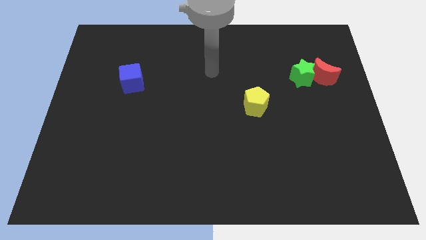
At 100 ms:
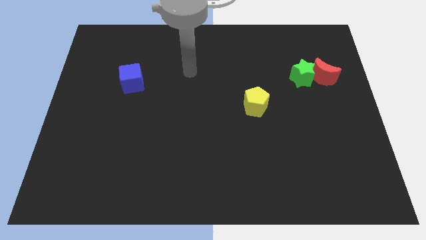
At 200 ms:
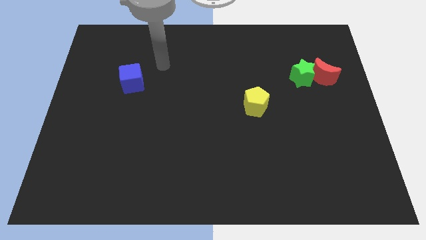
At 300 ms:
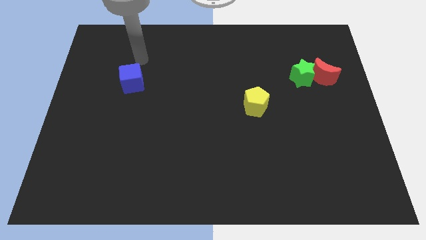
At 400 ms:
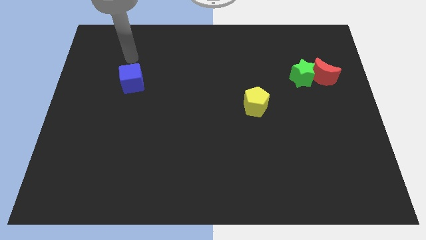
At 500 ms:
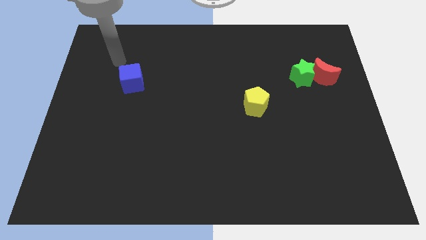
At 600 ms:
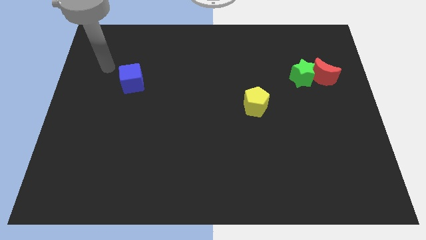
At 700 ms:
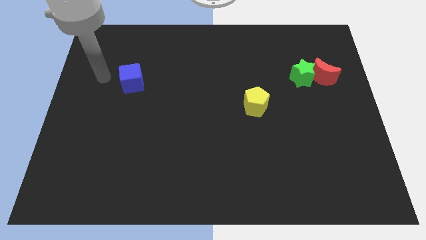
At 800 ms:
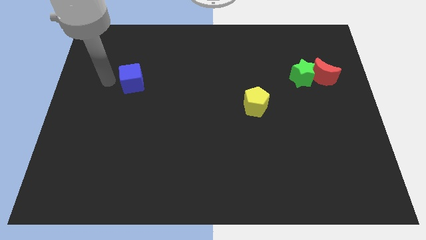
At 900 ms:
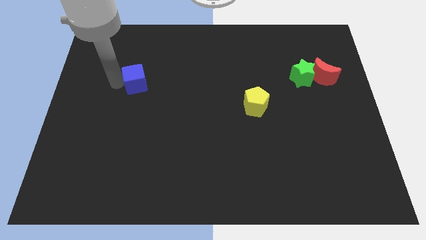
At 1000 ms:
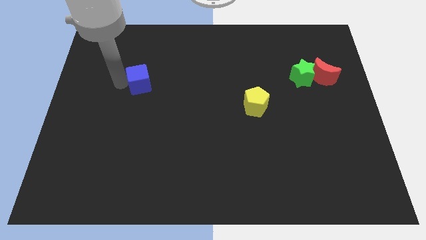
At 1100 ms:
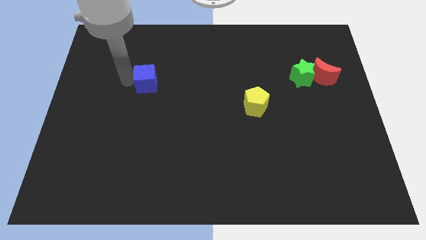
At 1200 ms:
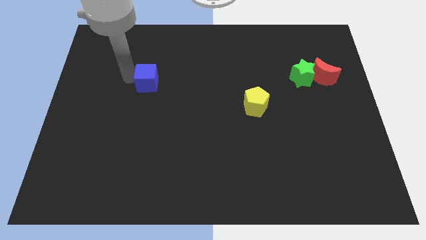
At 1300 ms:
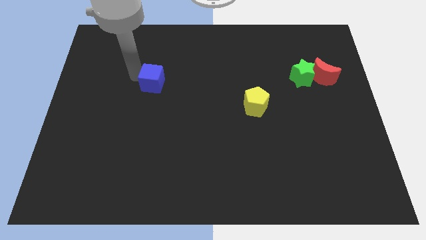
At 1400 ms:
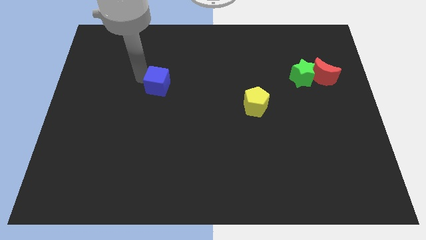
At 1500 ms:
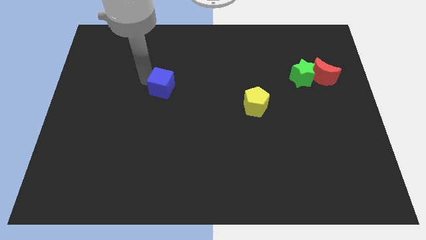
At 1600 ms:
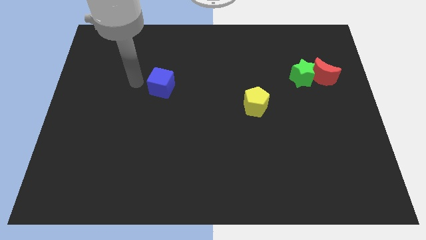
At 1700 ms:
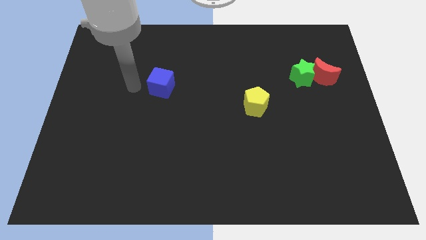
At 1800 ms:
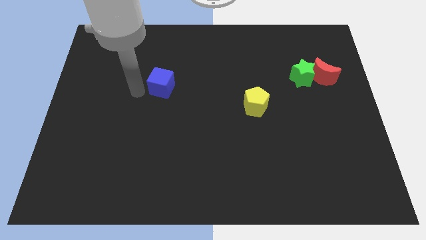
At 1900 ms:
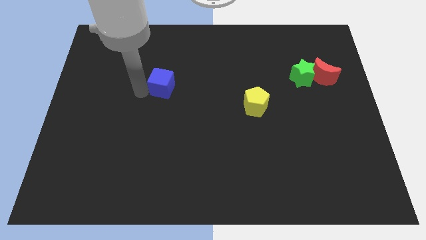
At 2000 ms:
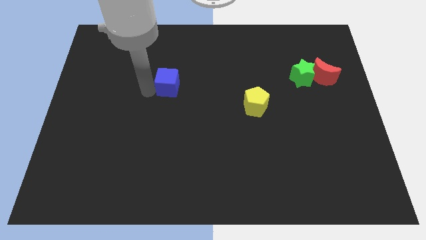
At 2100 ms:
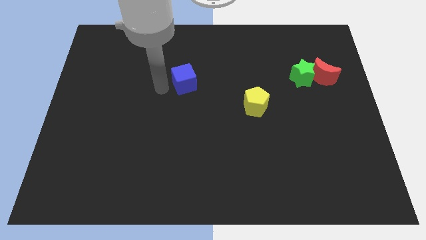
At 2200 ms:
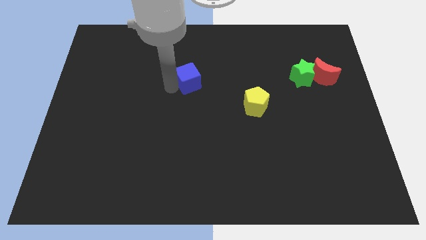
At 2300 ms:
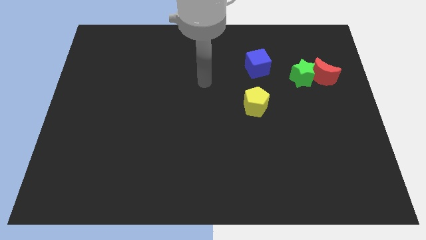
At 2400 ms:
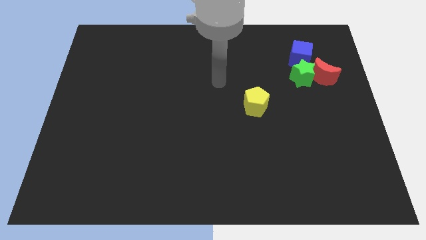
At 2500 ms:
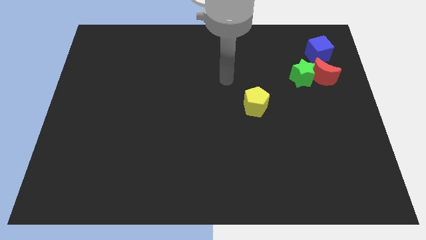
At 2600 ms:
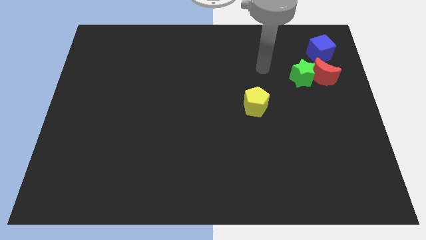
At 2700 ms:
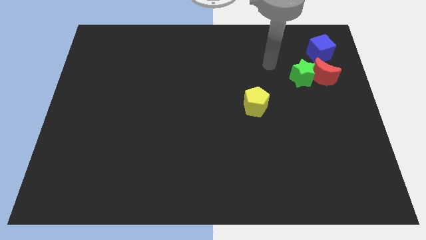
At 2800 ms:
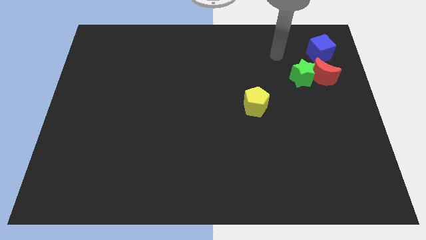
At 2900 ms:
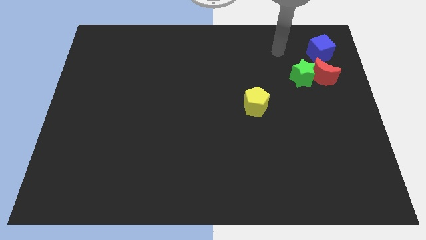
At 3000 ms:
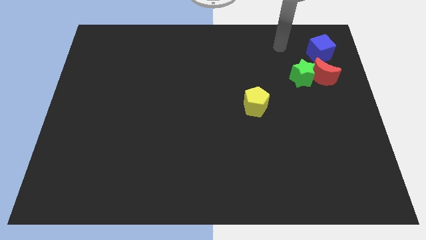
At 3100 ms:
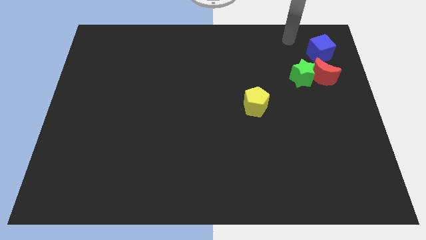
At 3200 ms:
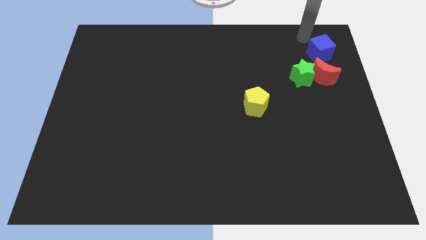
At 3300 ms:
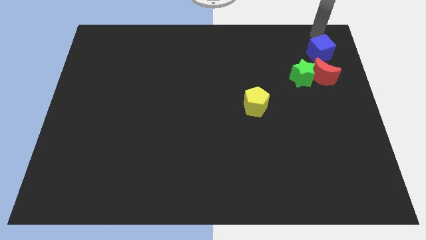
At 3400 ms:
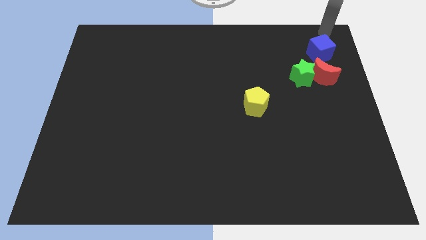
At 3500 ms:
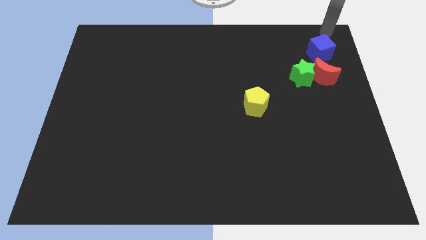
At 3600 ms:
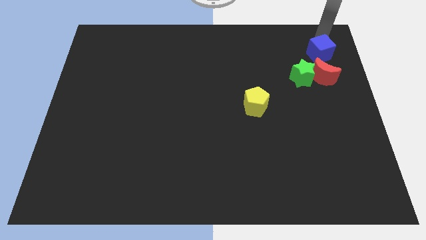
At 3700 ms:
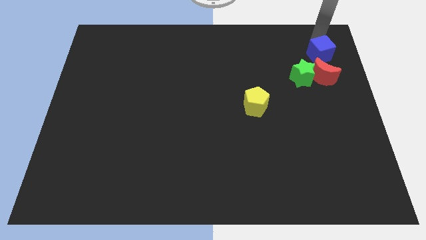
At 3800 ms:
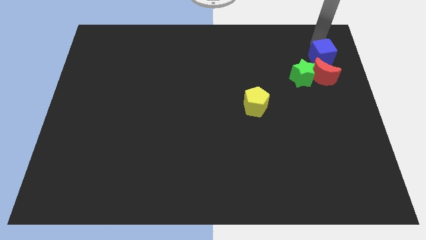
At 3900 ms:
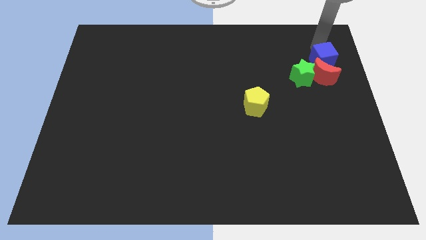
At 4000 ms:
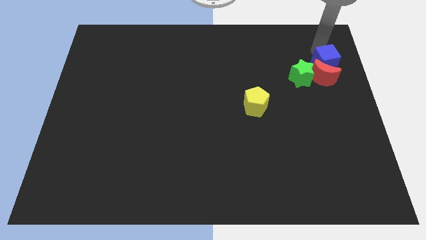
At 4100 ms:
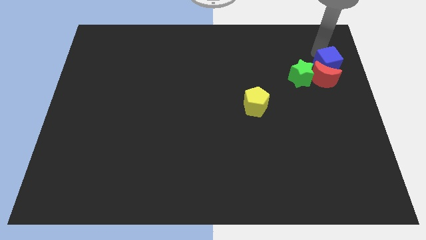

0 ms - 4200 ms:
slide the cube towards the moon

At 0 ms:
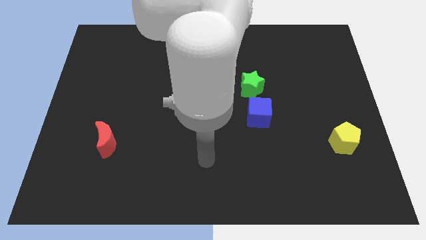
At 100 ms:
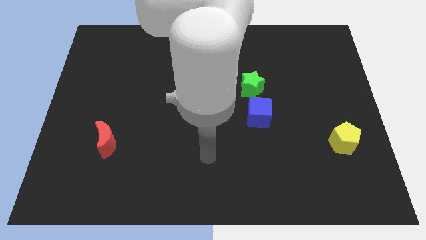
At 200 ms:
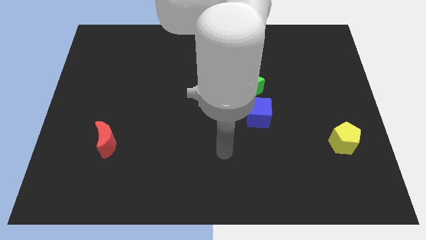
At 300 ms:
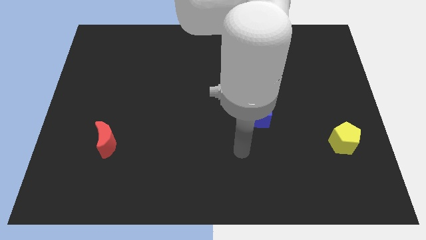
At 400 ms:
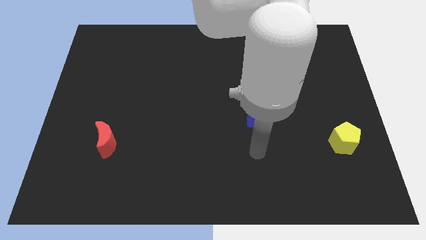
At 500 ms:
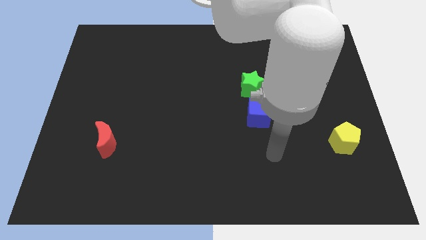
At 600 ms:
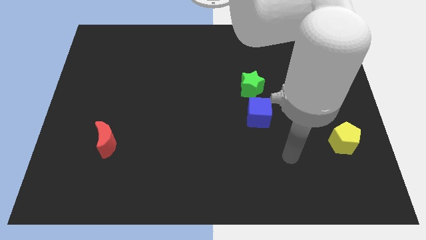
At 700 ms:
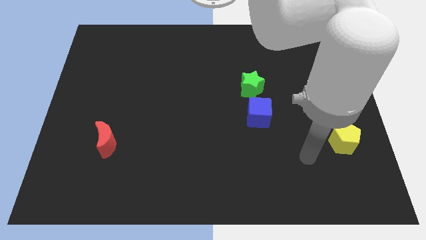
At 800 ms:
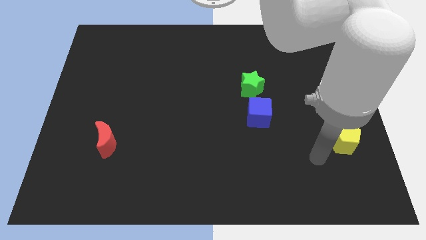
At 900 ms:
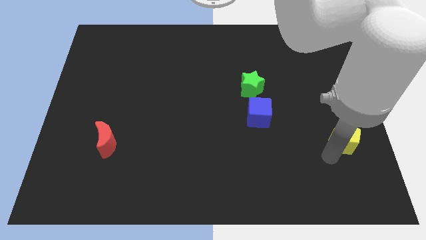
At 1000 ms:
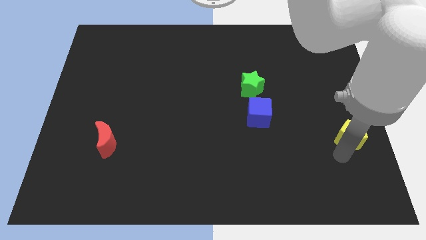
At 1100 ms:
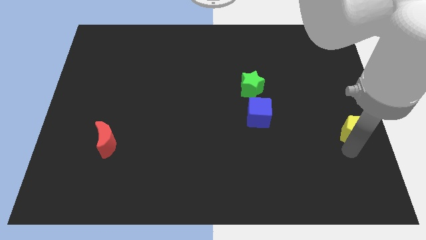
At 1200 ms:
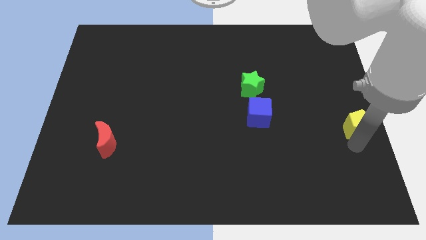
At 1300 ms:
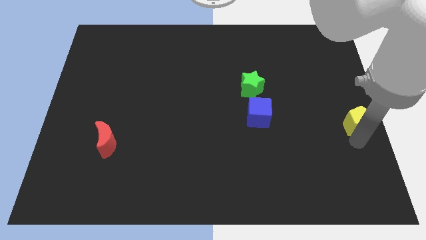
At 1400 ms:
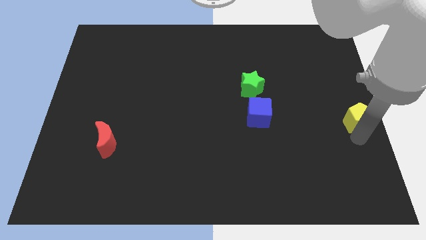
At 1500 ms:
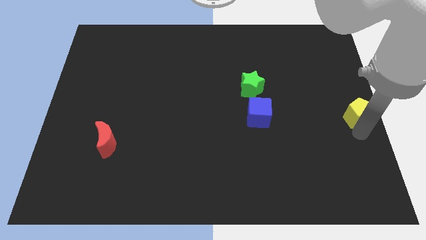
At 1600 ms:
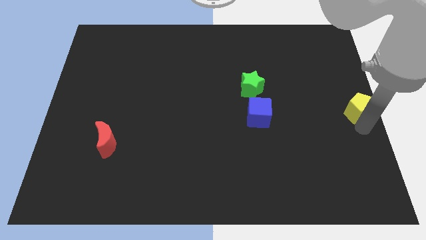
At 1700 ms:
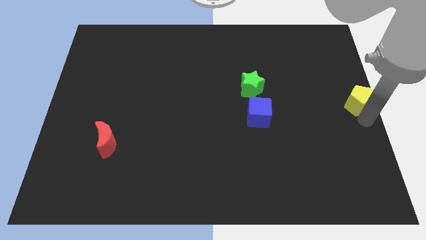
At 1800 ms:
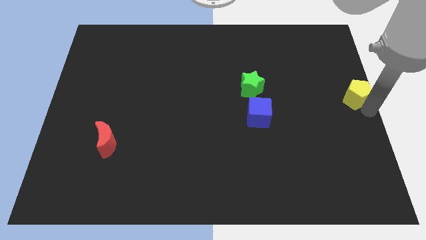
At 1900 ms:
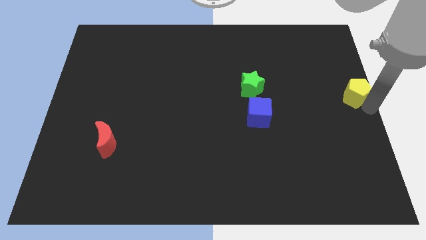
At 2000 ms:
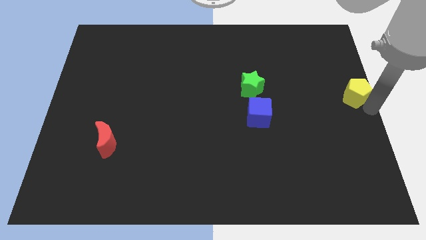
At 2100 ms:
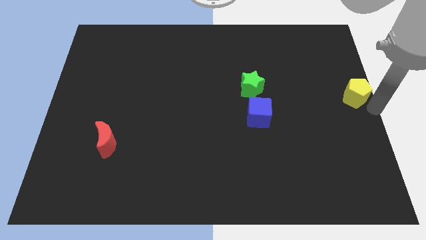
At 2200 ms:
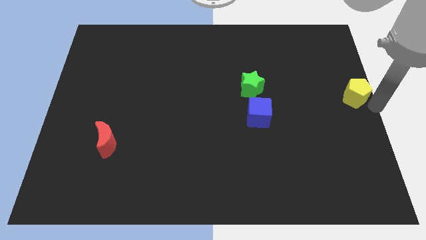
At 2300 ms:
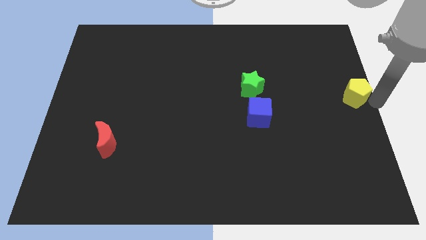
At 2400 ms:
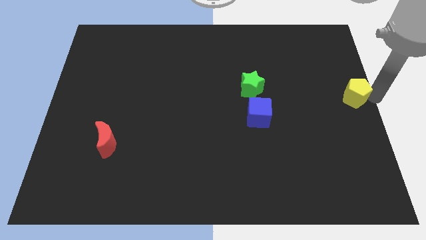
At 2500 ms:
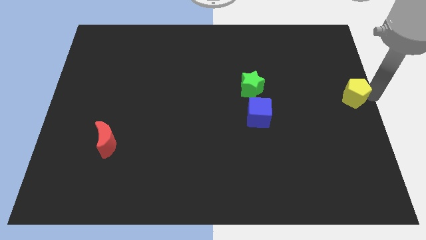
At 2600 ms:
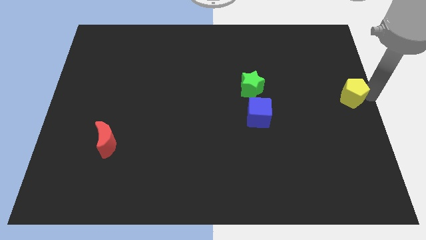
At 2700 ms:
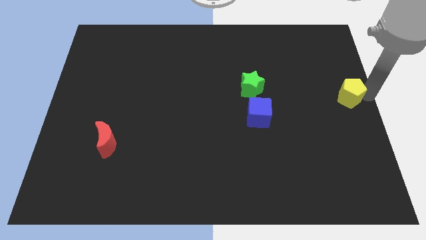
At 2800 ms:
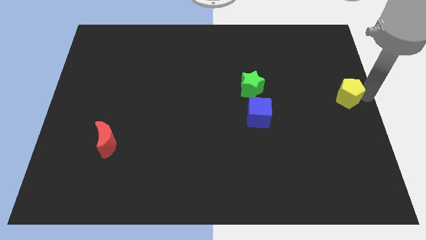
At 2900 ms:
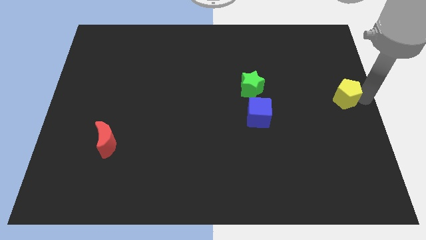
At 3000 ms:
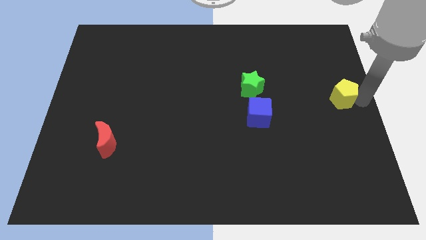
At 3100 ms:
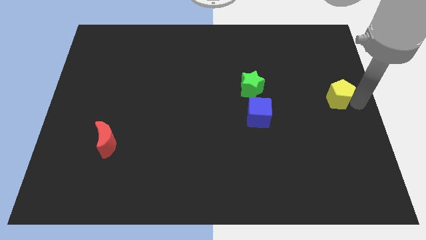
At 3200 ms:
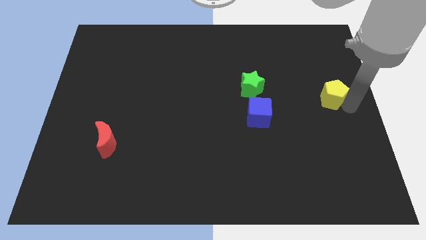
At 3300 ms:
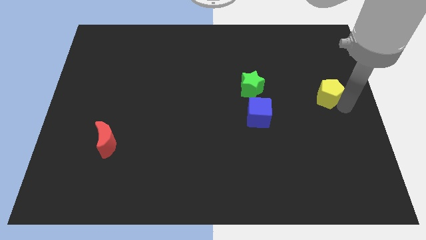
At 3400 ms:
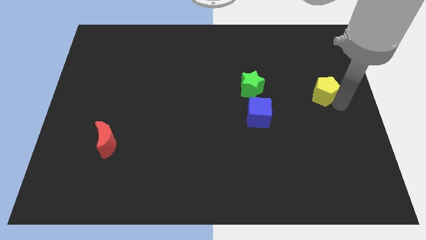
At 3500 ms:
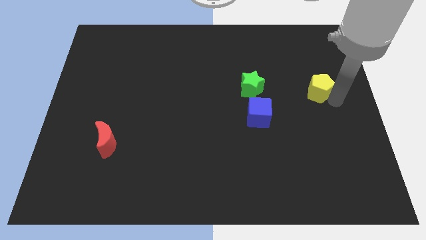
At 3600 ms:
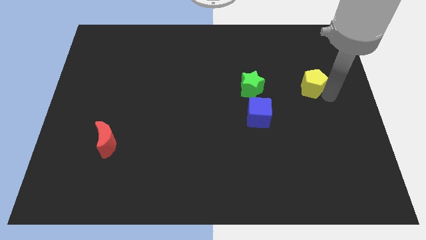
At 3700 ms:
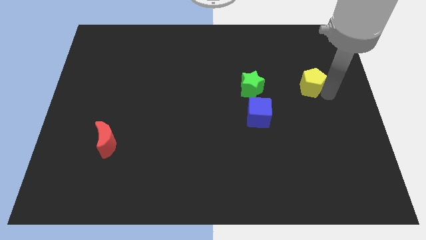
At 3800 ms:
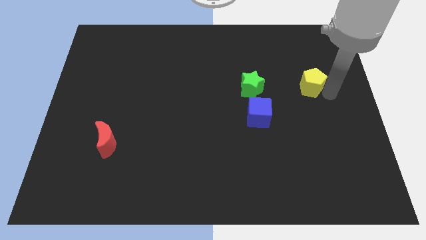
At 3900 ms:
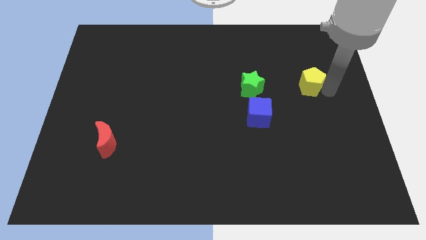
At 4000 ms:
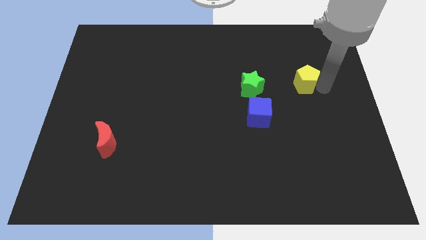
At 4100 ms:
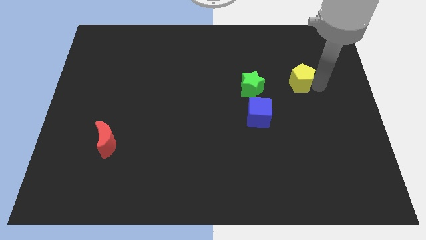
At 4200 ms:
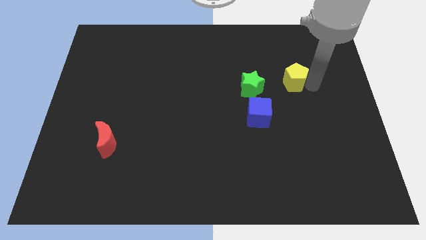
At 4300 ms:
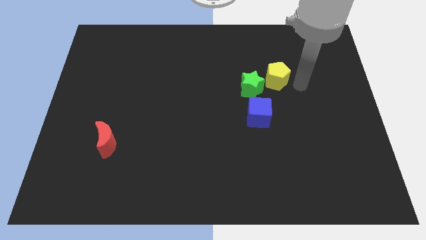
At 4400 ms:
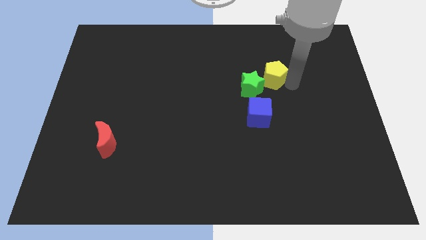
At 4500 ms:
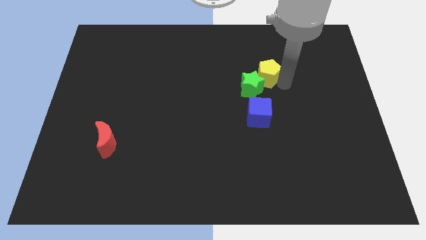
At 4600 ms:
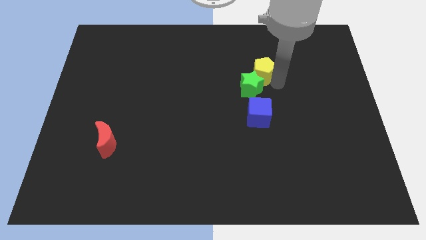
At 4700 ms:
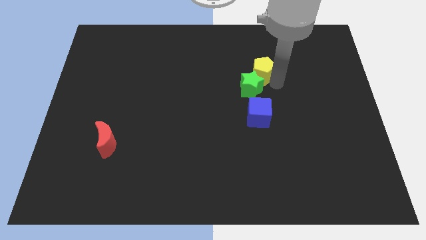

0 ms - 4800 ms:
put the yellow block next to the green block
